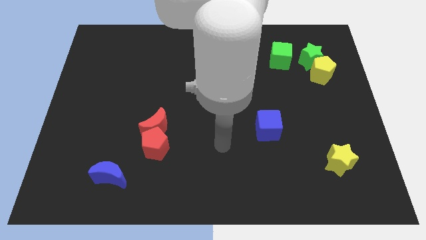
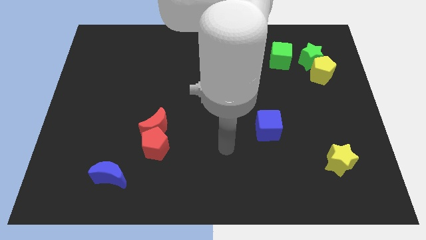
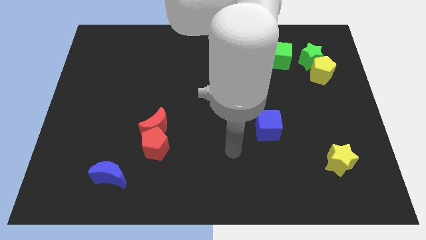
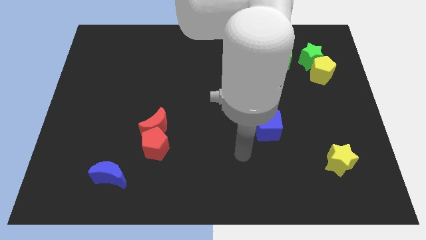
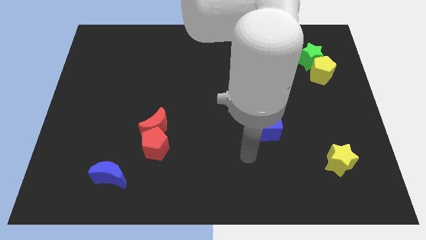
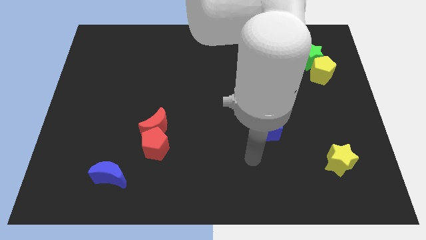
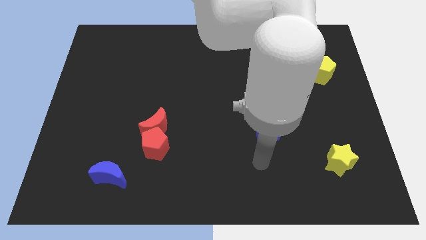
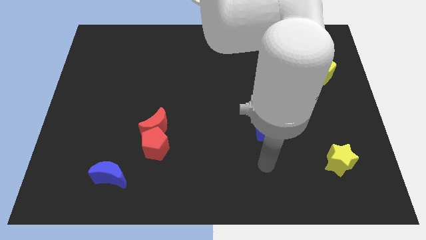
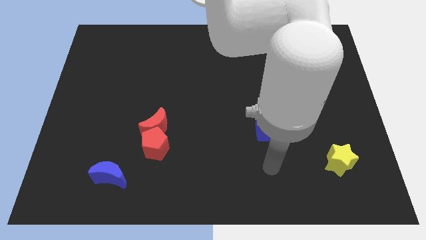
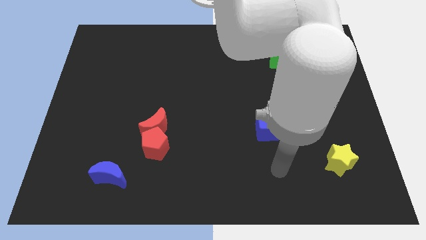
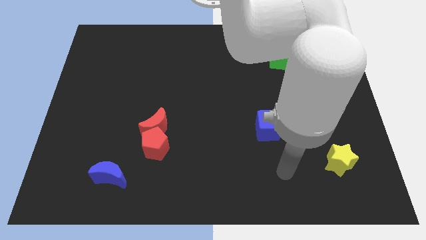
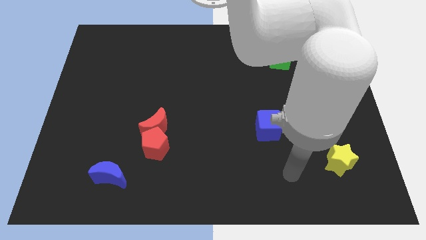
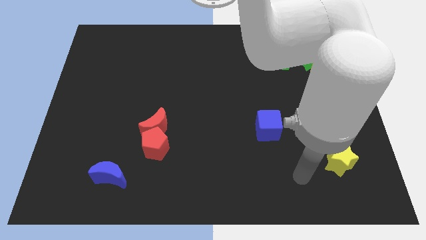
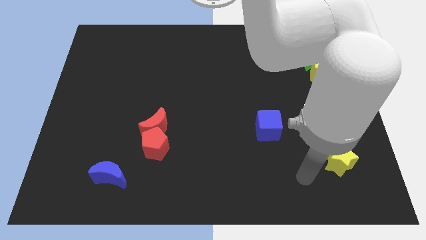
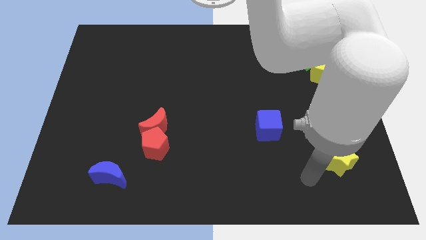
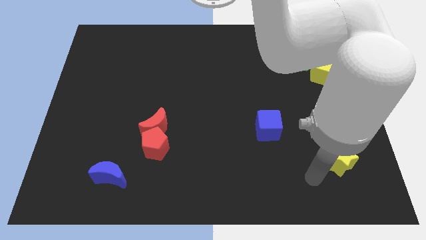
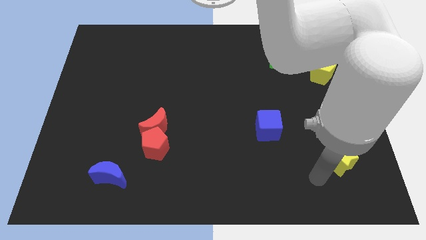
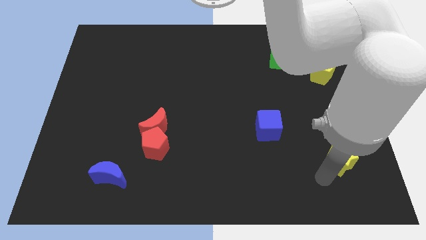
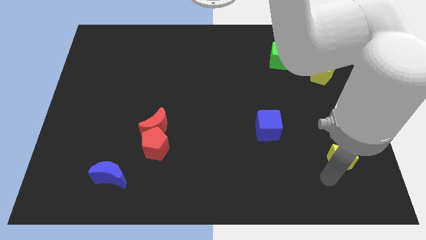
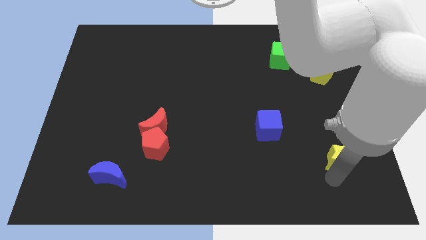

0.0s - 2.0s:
place your arm to the bottom of yellow star

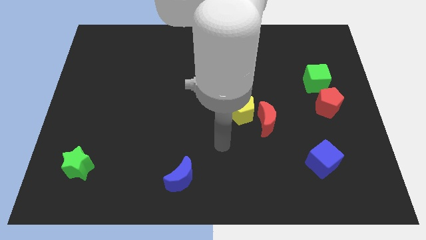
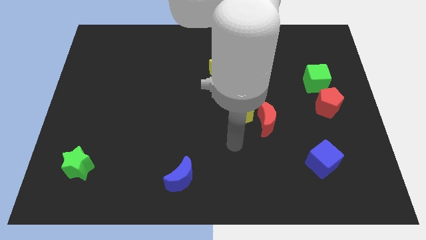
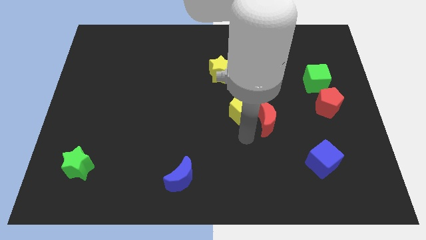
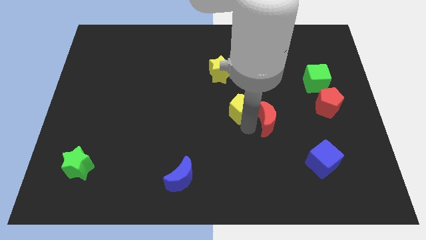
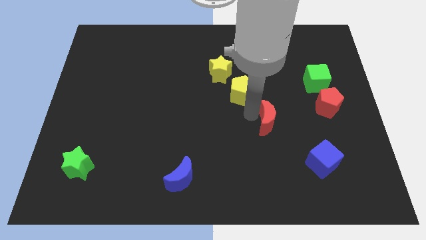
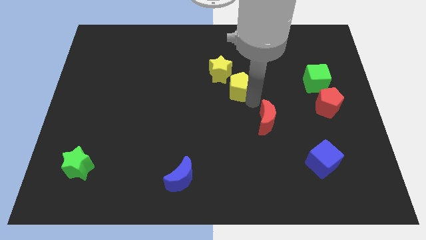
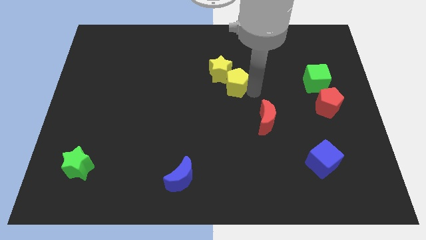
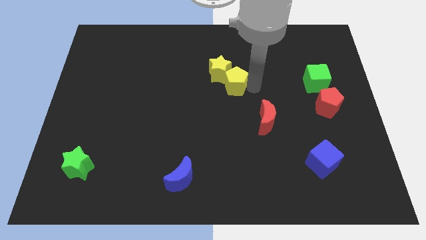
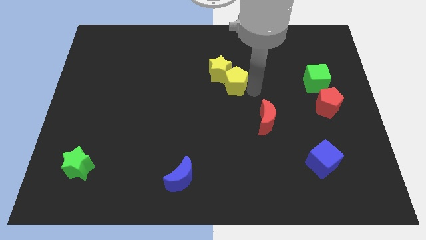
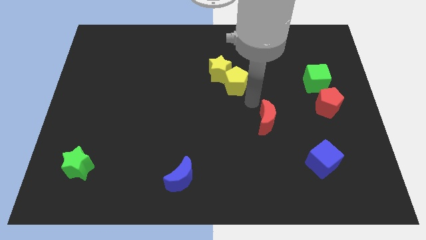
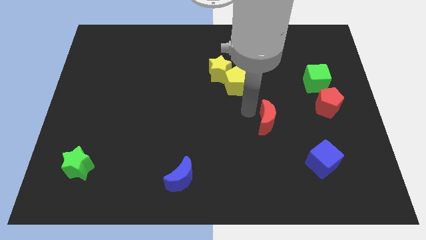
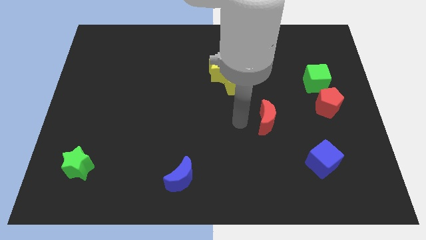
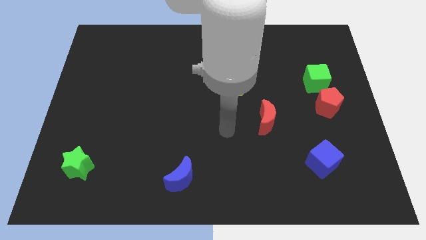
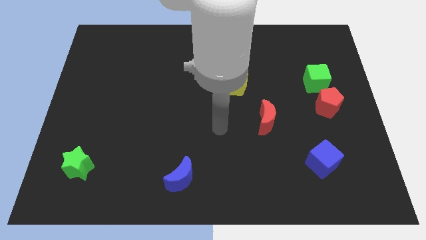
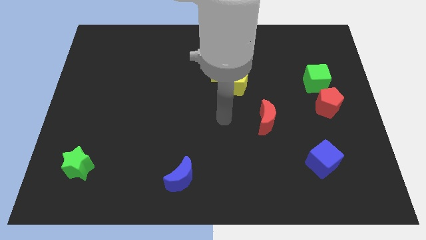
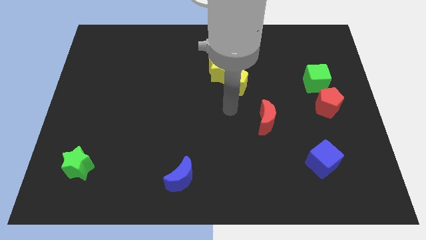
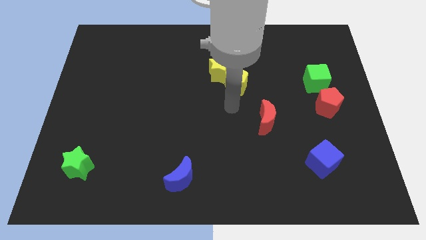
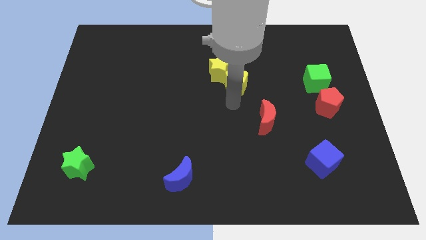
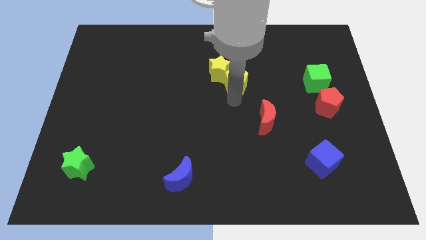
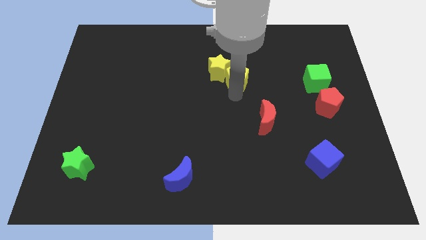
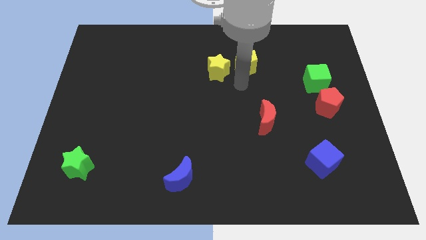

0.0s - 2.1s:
move the yellow pentagon to the right of the yellow star

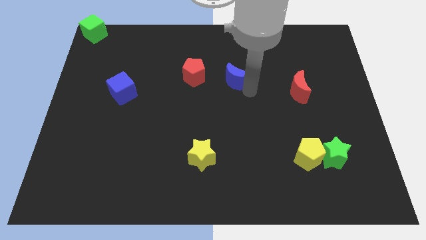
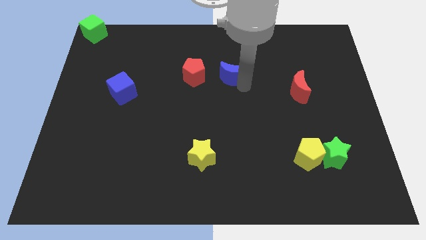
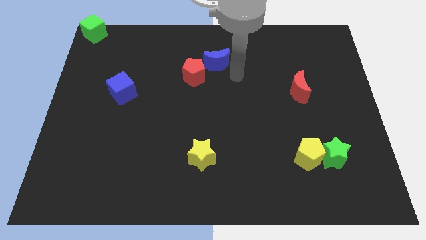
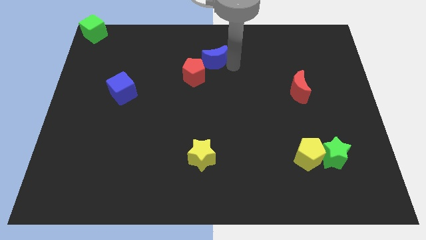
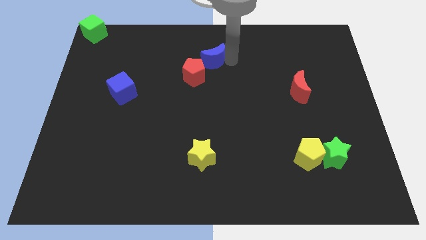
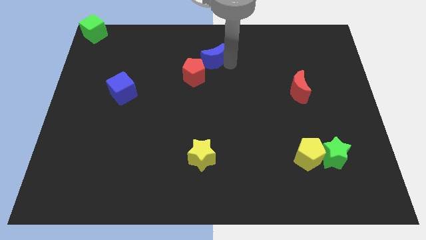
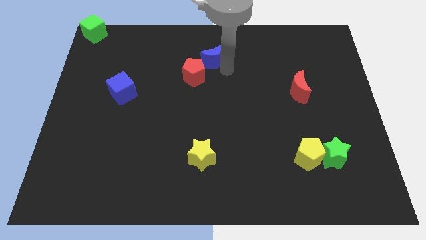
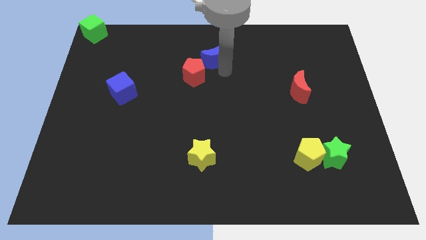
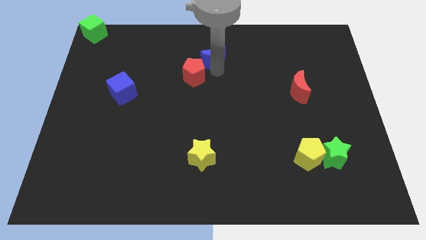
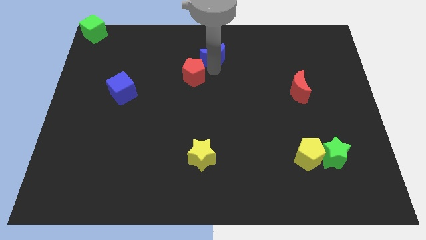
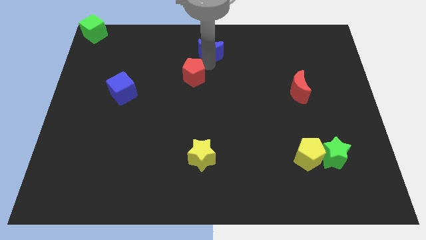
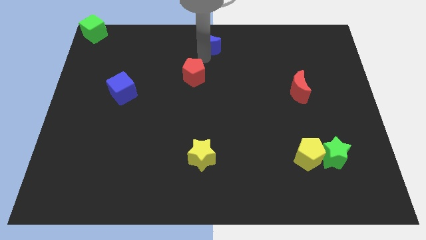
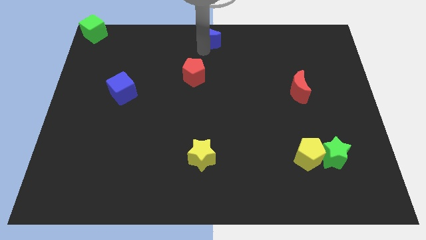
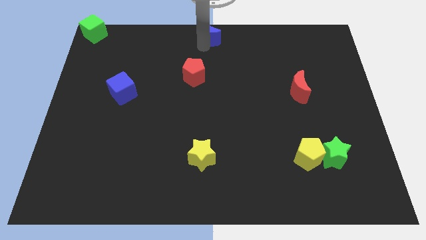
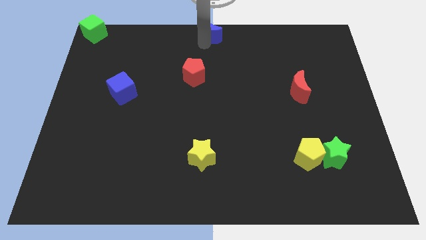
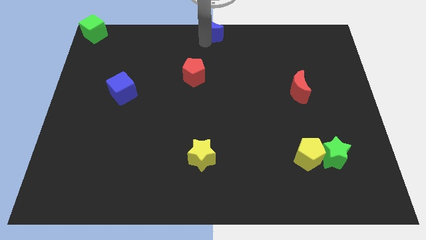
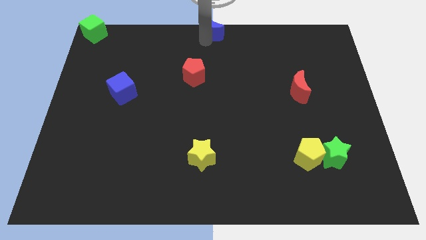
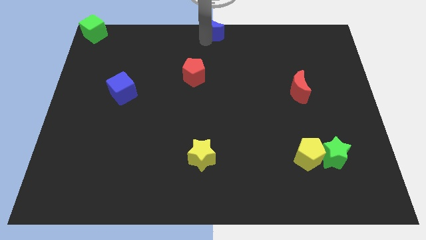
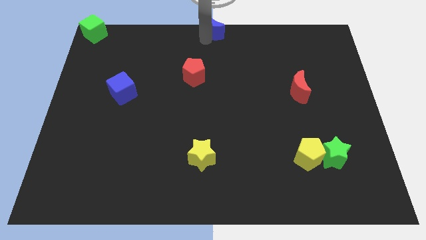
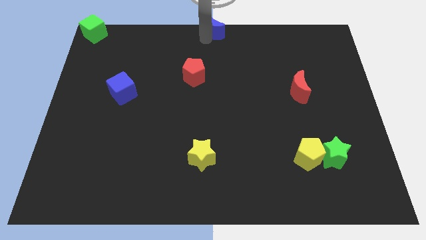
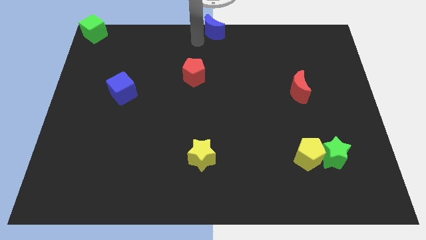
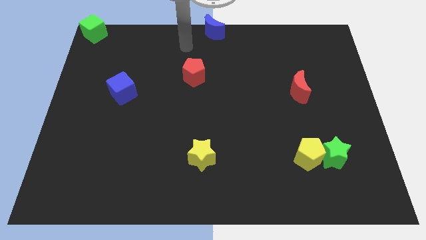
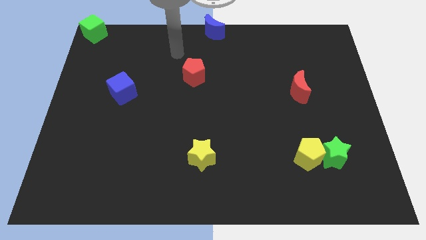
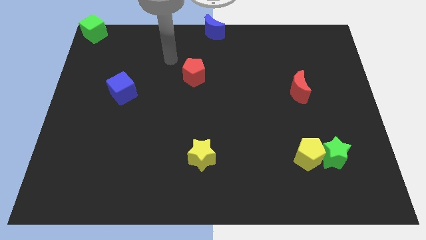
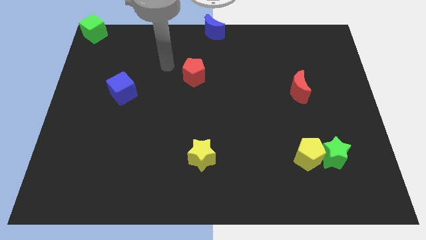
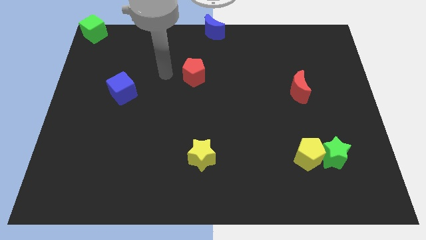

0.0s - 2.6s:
move the blue moon to the top center

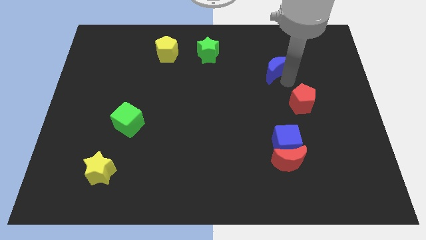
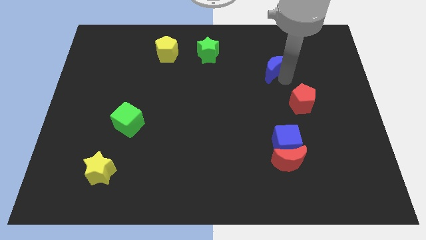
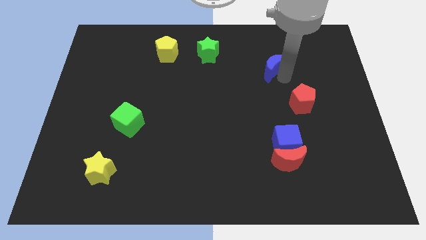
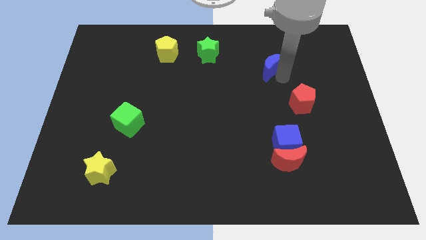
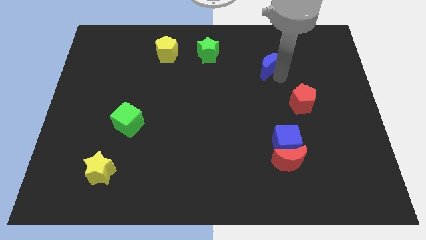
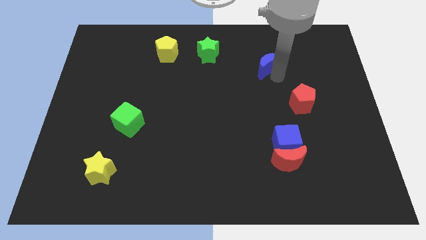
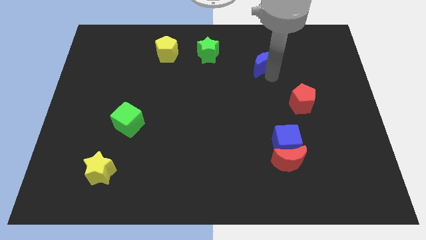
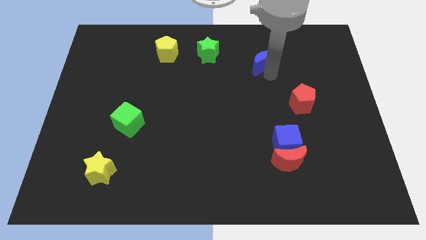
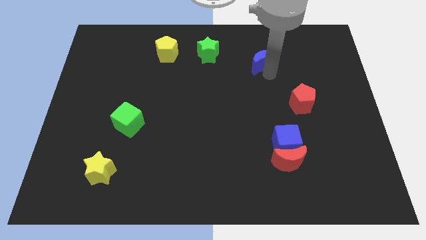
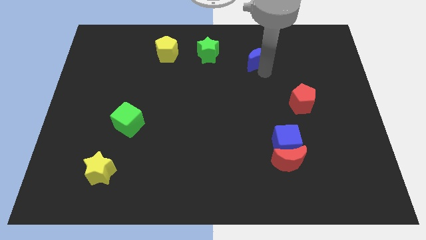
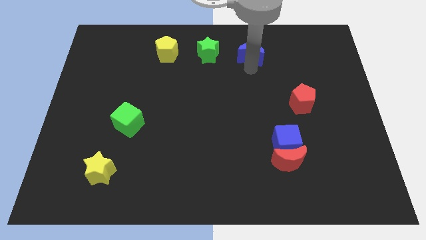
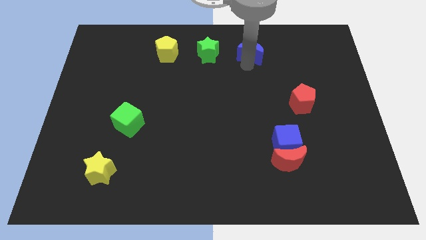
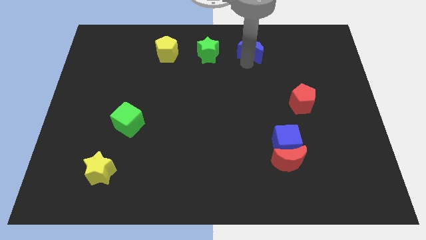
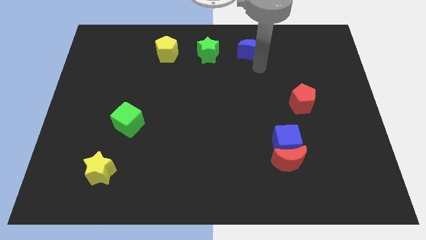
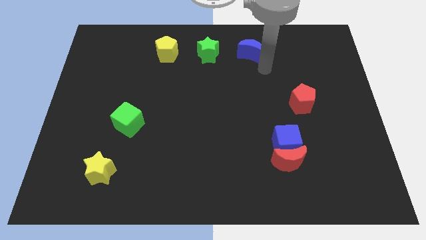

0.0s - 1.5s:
push the blue crescent to the right of the green star

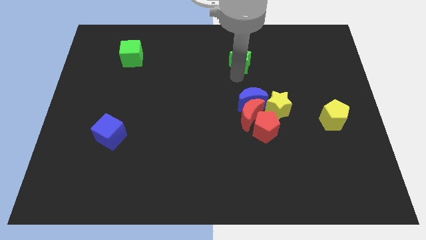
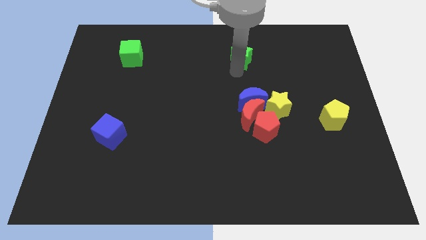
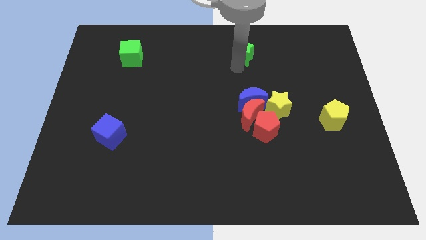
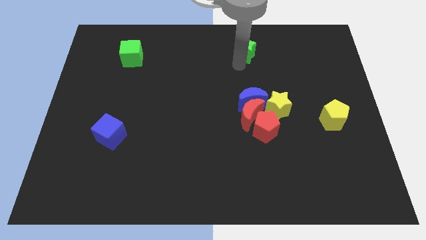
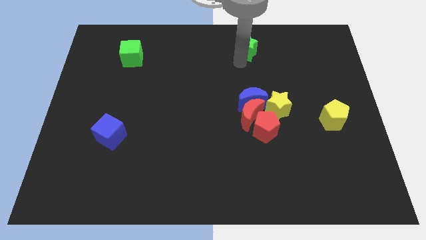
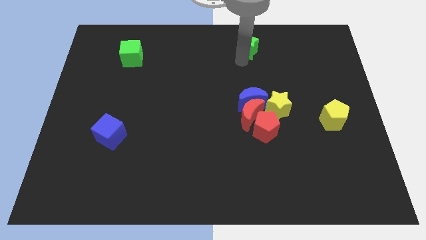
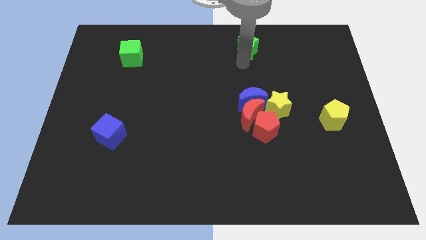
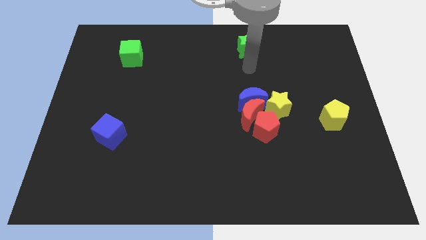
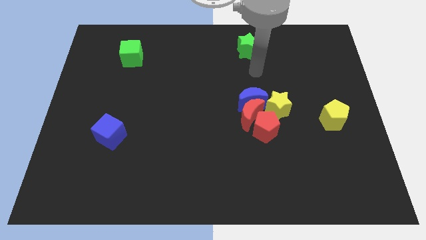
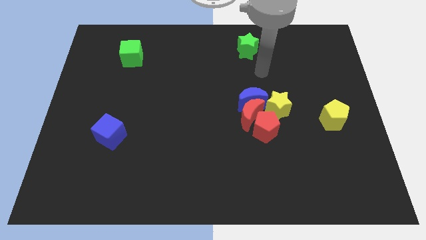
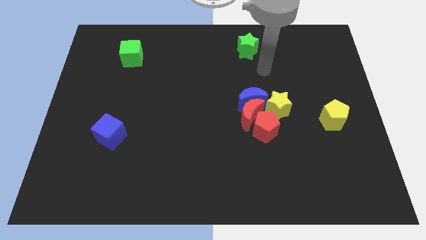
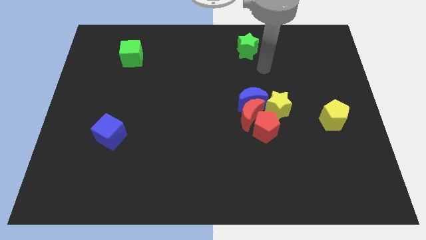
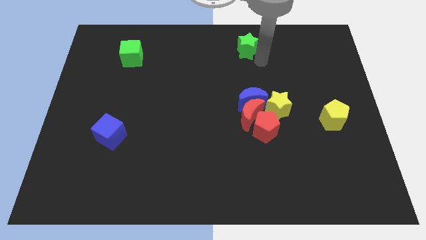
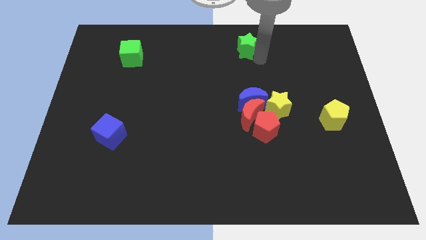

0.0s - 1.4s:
push the green star slightly upwards
